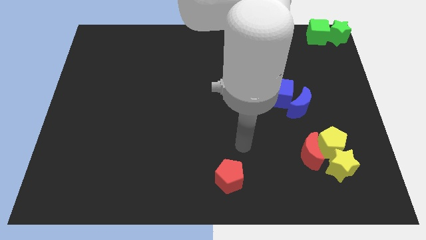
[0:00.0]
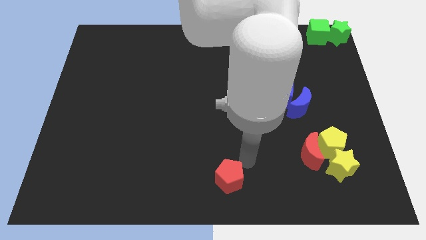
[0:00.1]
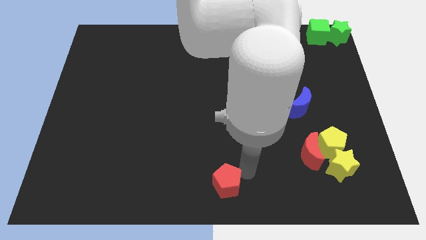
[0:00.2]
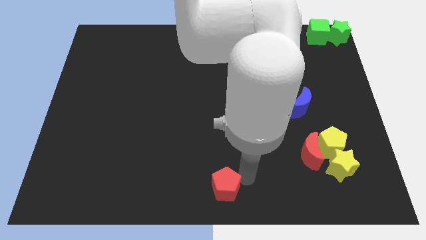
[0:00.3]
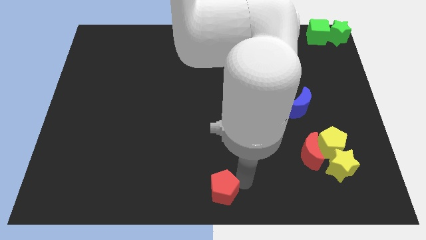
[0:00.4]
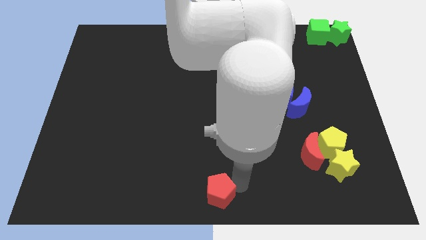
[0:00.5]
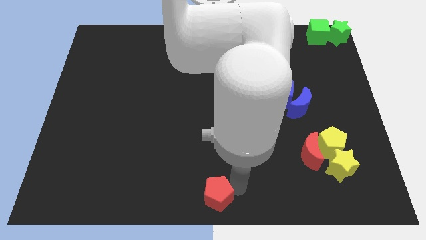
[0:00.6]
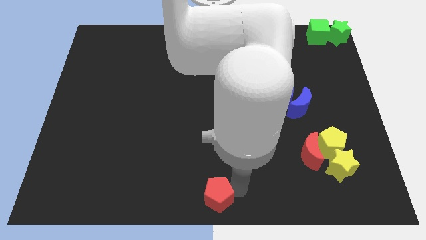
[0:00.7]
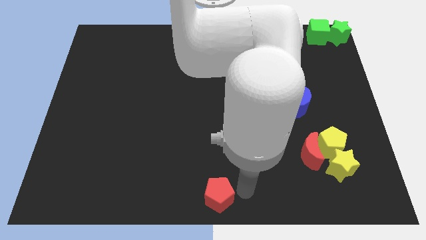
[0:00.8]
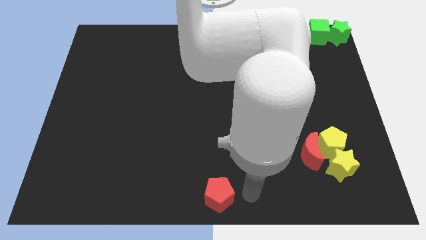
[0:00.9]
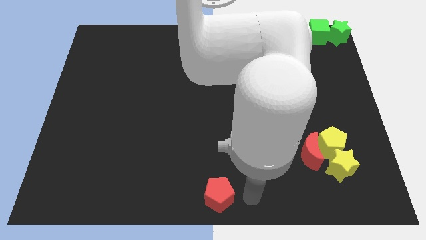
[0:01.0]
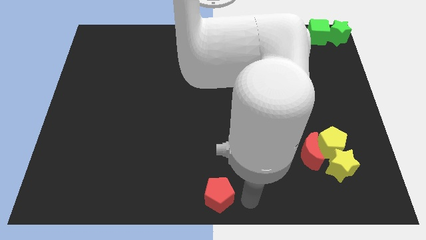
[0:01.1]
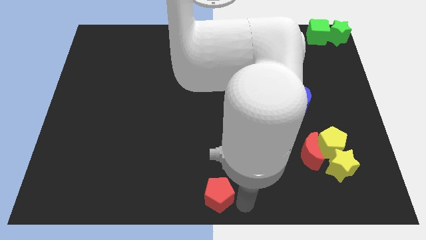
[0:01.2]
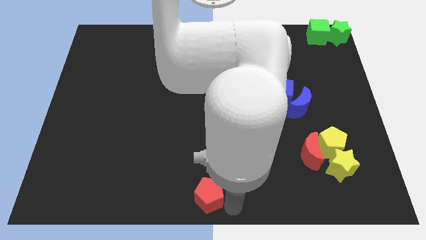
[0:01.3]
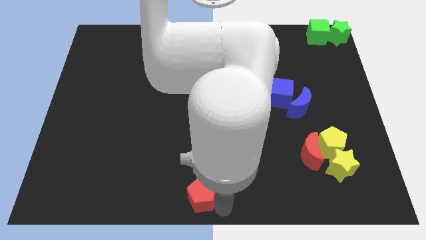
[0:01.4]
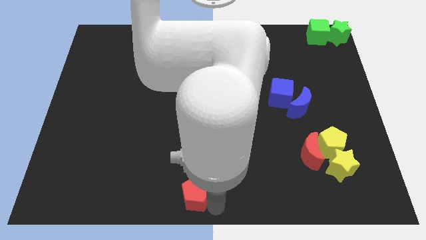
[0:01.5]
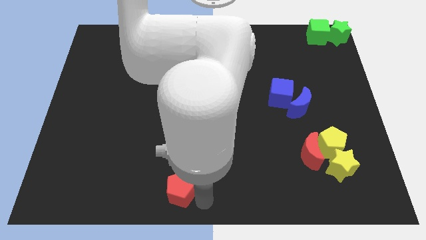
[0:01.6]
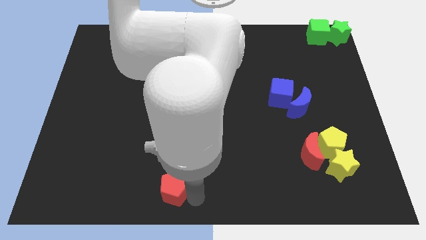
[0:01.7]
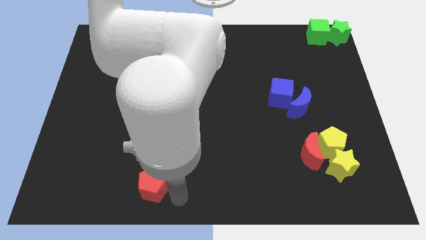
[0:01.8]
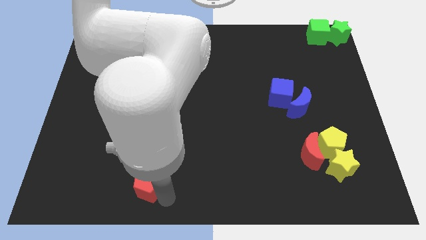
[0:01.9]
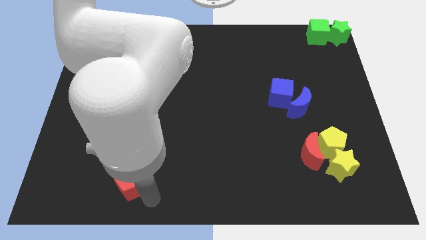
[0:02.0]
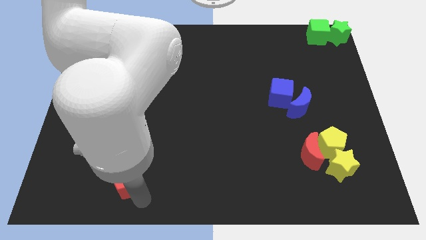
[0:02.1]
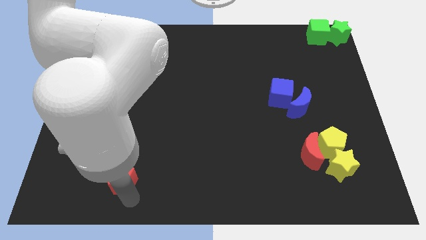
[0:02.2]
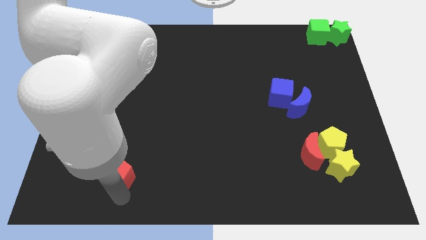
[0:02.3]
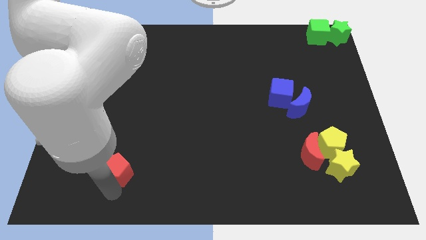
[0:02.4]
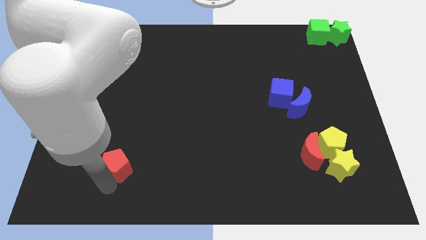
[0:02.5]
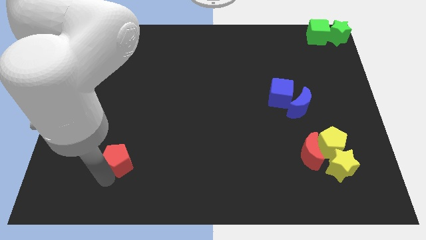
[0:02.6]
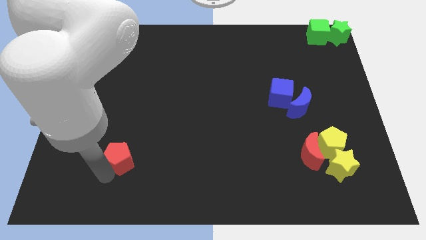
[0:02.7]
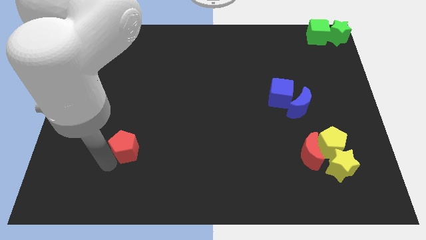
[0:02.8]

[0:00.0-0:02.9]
move the red pentagon horizontal to the red crescent

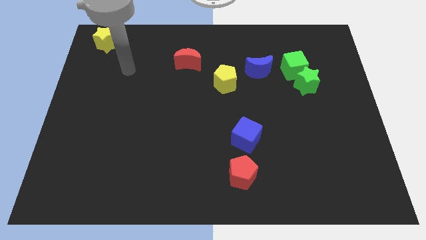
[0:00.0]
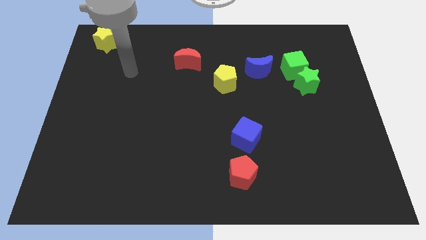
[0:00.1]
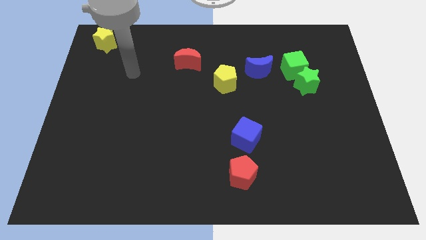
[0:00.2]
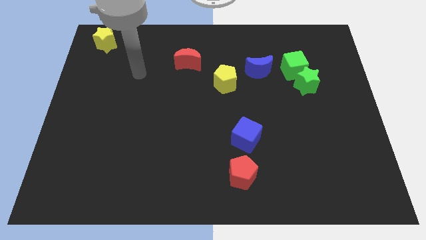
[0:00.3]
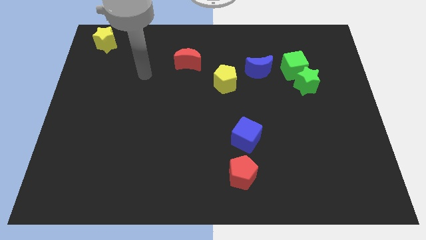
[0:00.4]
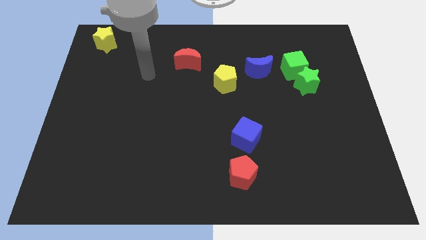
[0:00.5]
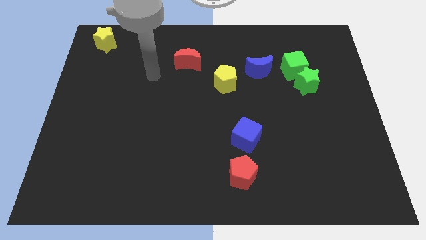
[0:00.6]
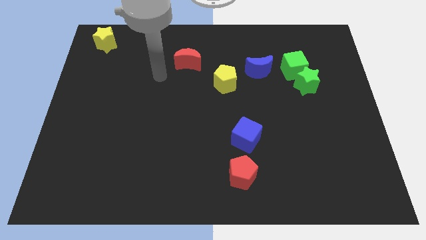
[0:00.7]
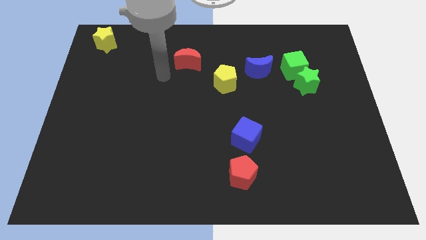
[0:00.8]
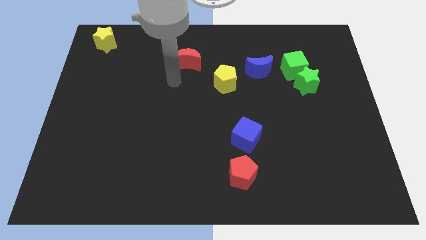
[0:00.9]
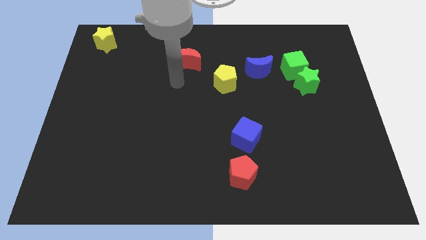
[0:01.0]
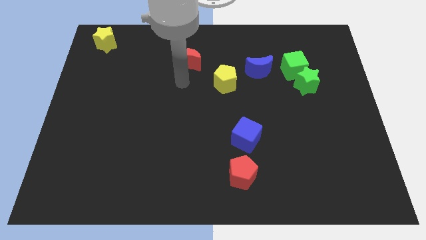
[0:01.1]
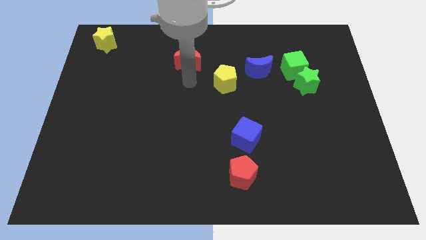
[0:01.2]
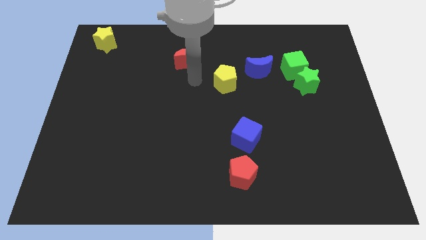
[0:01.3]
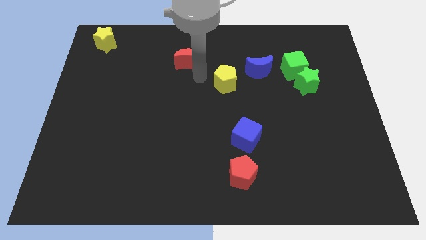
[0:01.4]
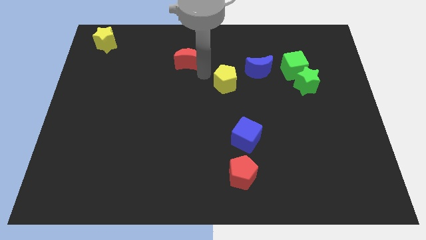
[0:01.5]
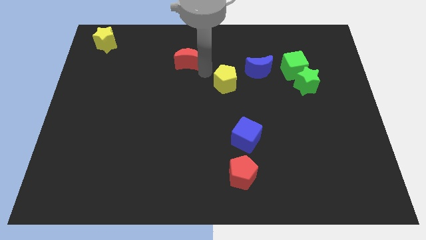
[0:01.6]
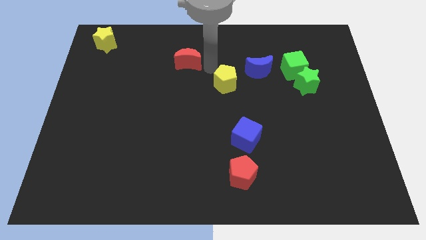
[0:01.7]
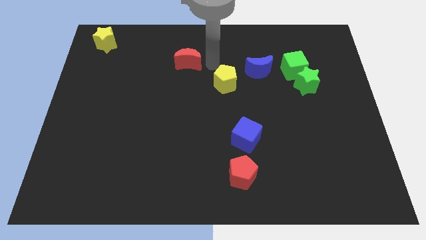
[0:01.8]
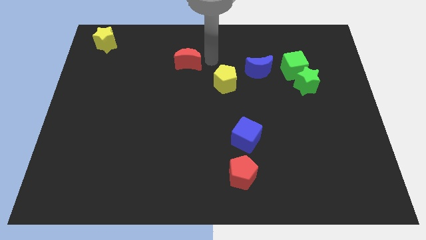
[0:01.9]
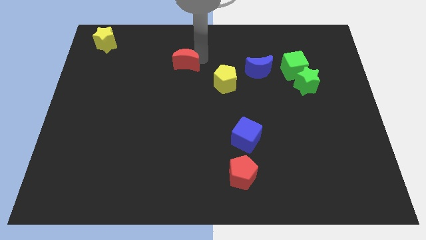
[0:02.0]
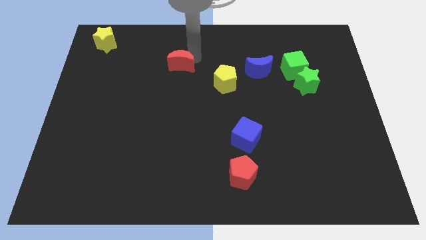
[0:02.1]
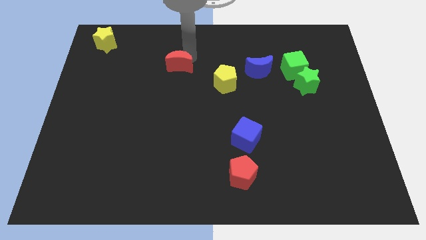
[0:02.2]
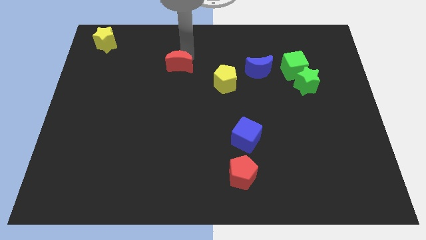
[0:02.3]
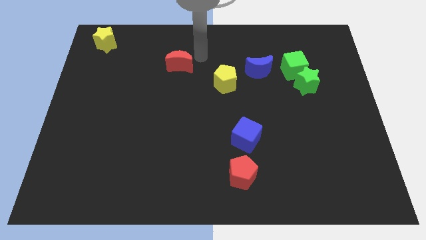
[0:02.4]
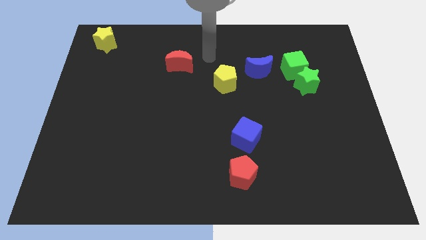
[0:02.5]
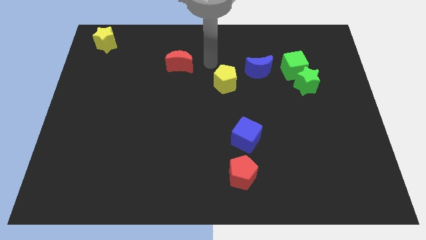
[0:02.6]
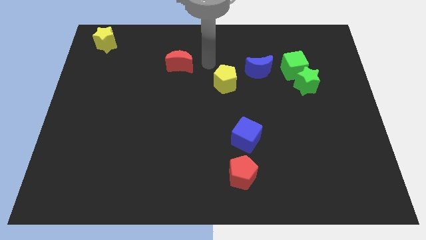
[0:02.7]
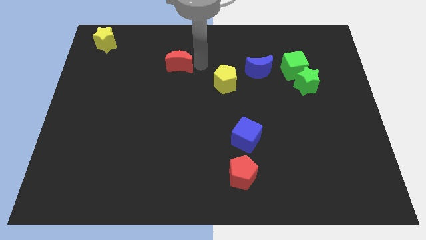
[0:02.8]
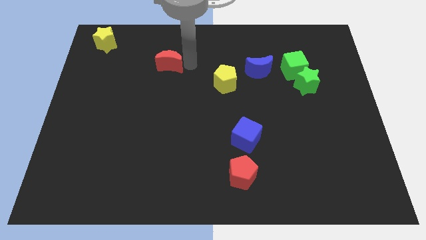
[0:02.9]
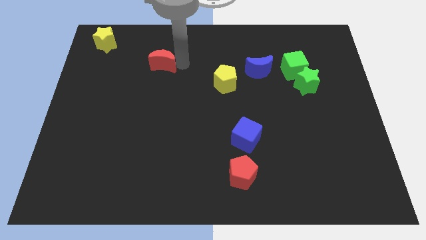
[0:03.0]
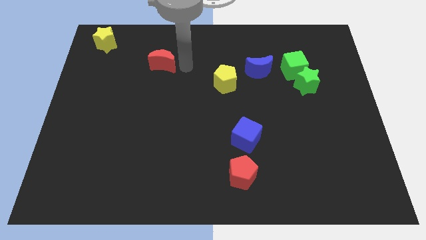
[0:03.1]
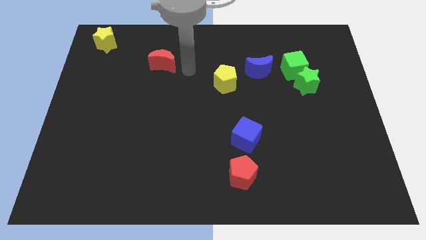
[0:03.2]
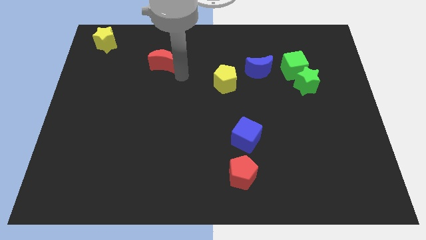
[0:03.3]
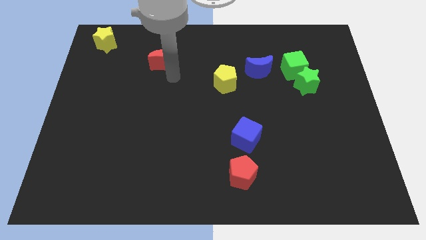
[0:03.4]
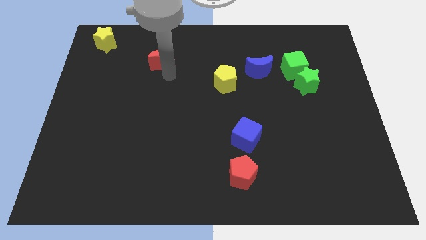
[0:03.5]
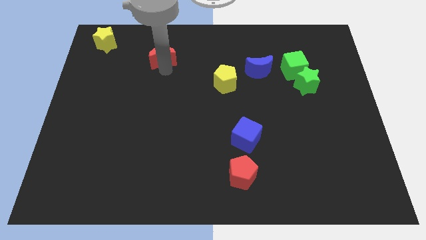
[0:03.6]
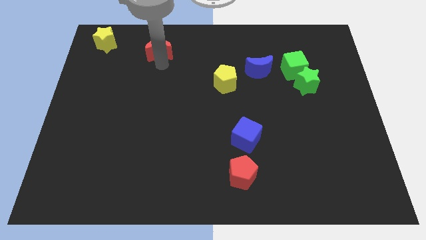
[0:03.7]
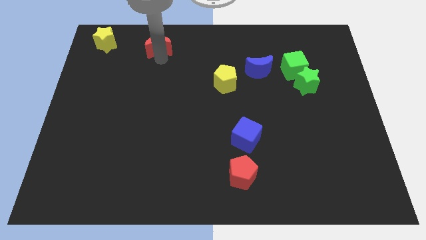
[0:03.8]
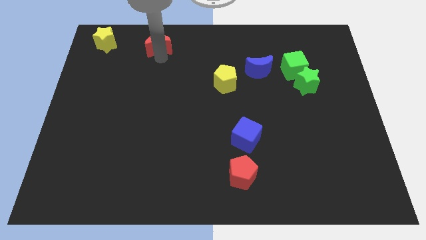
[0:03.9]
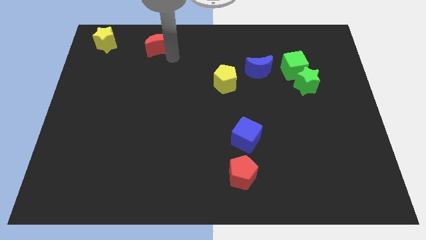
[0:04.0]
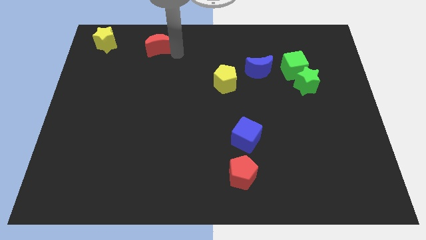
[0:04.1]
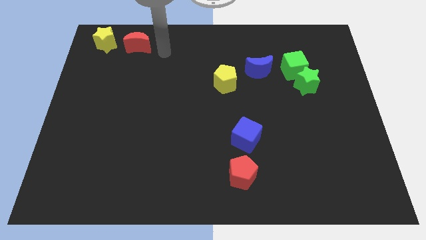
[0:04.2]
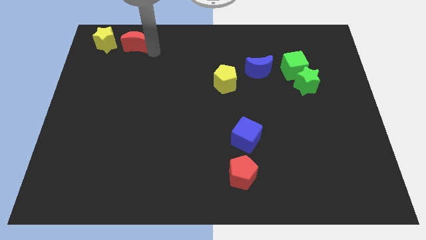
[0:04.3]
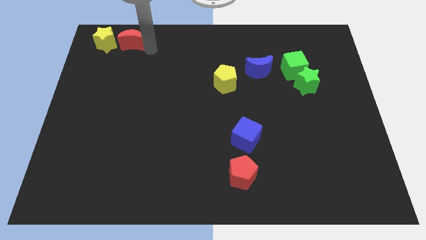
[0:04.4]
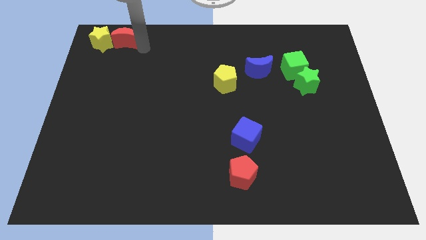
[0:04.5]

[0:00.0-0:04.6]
drag the red crescent into the right side of the yellow star

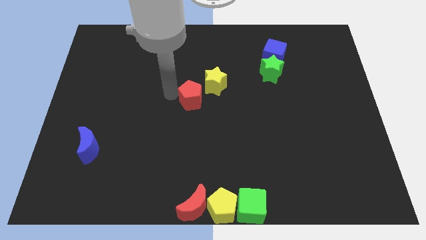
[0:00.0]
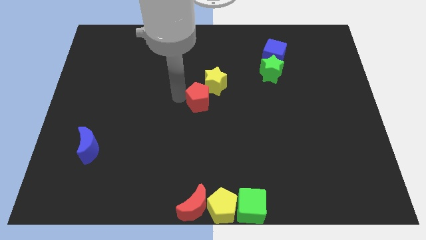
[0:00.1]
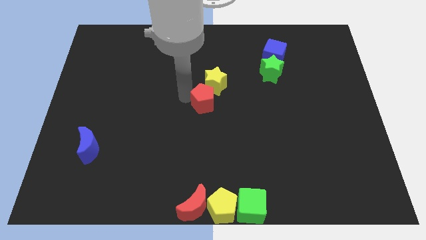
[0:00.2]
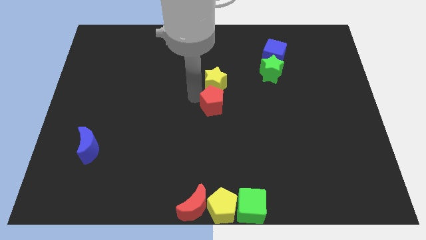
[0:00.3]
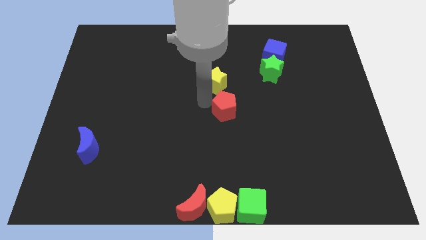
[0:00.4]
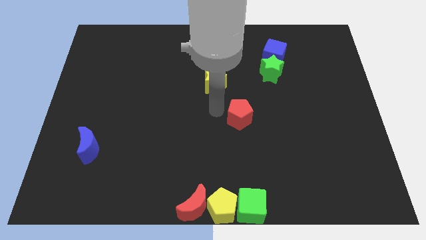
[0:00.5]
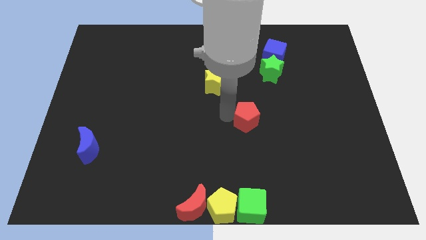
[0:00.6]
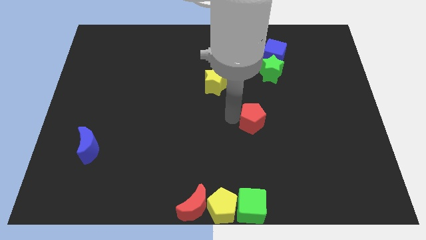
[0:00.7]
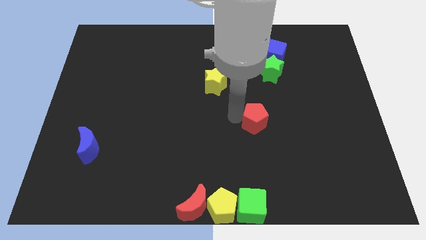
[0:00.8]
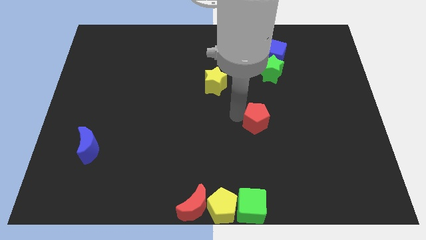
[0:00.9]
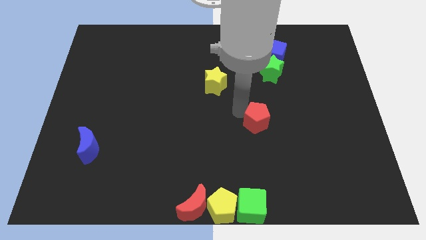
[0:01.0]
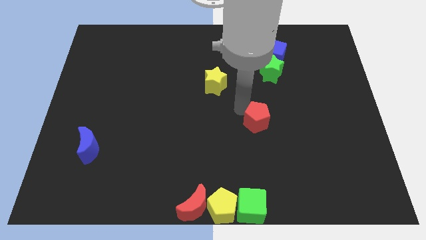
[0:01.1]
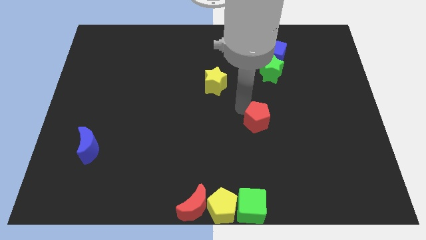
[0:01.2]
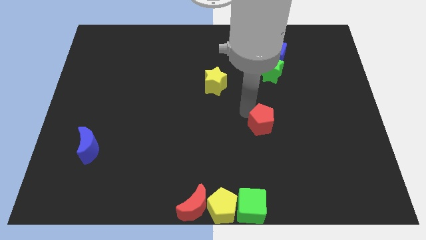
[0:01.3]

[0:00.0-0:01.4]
push the red pentagon diagonally bottom right to the yellow star
